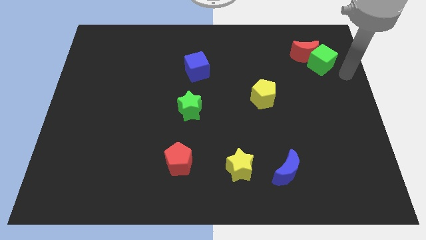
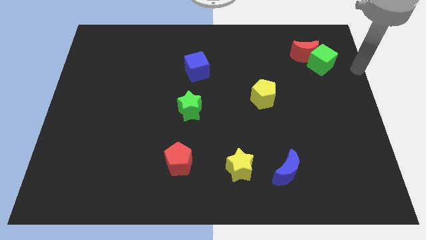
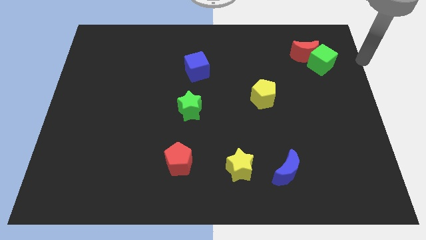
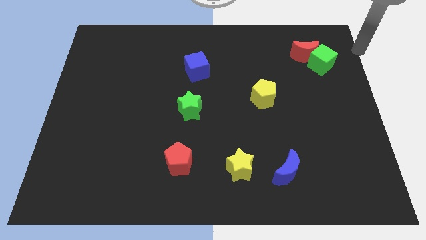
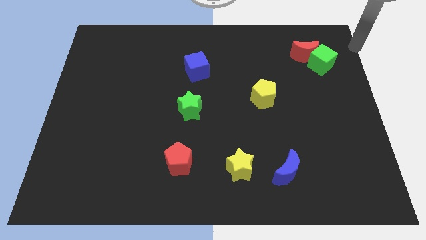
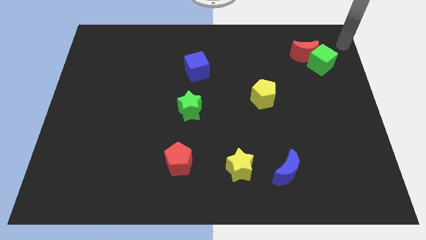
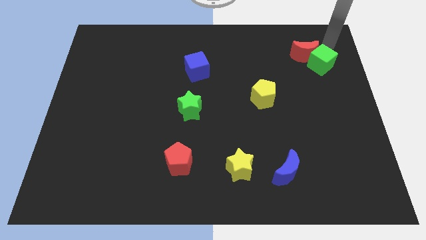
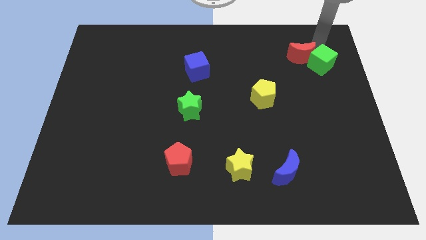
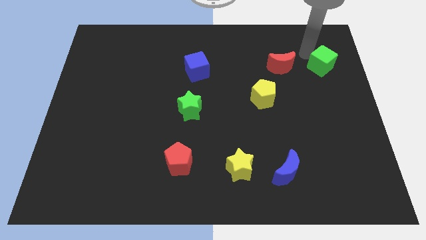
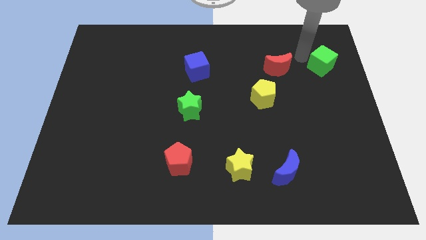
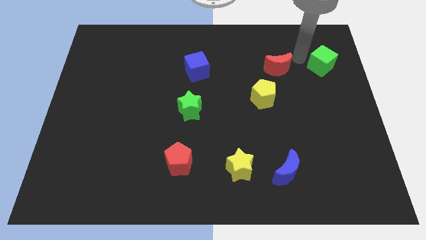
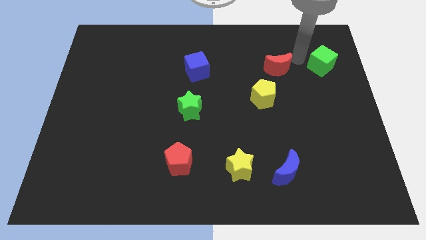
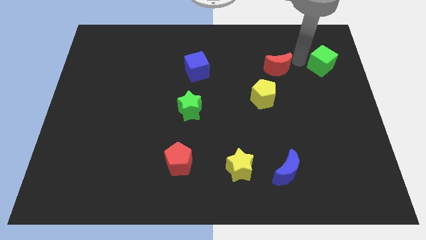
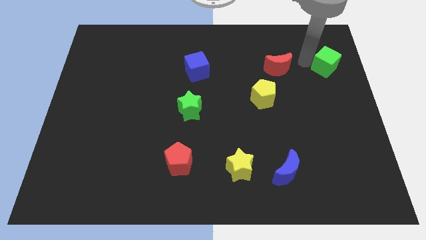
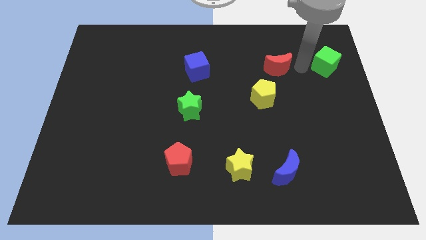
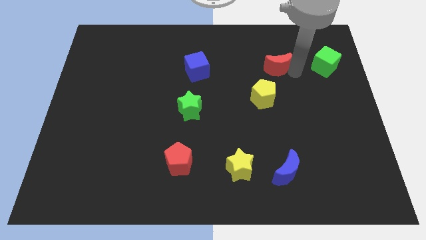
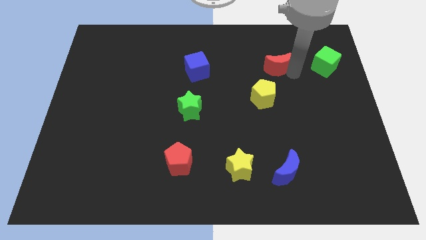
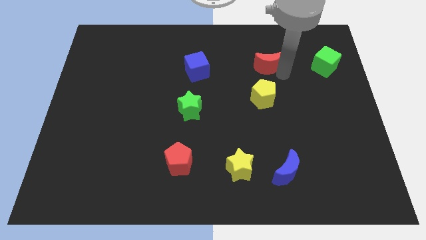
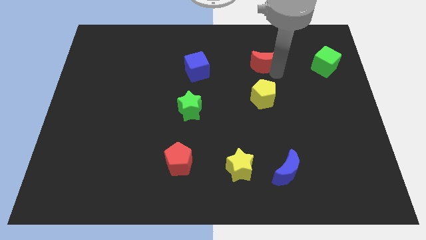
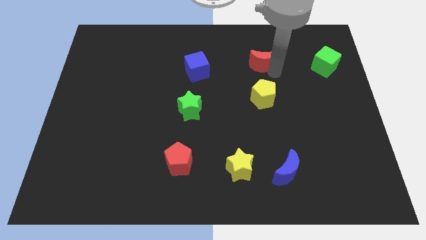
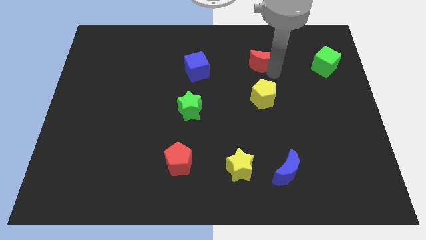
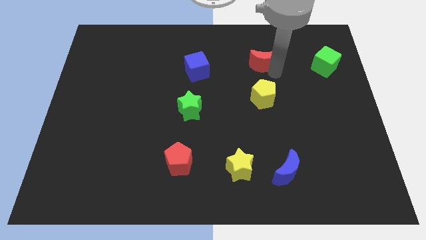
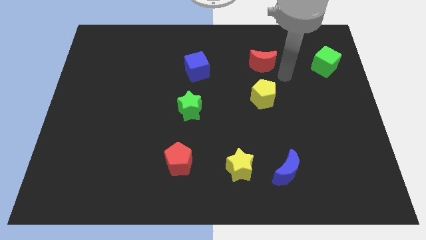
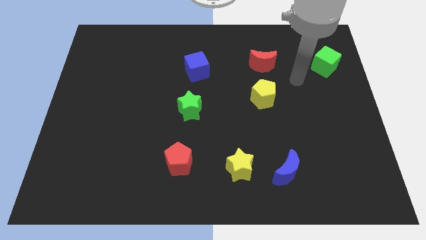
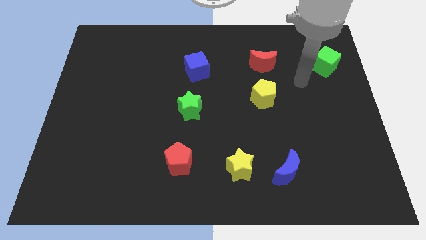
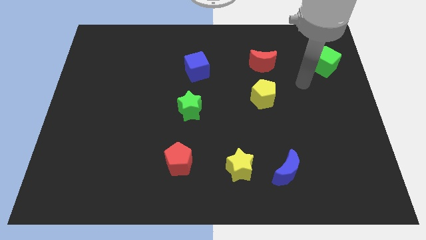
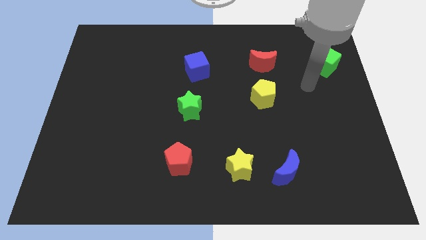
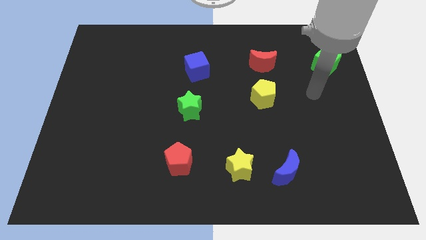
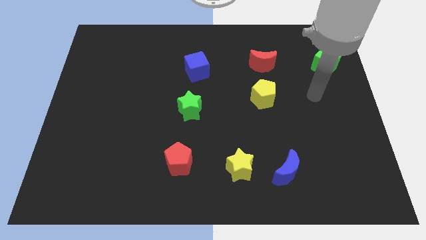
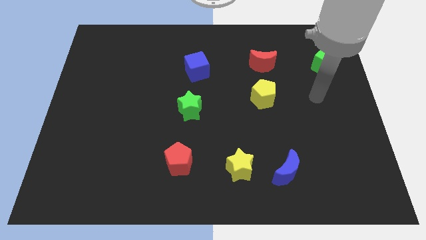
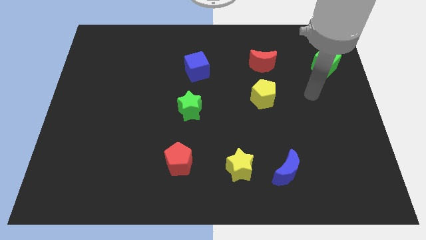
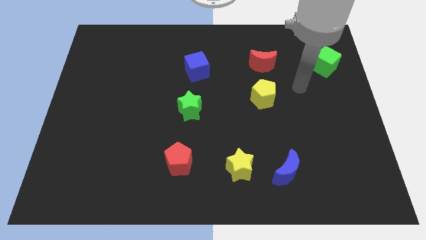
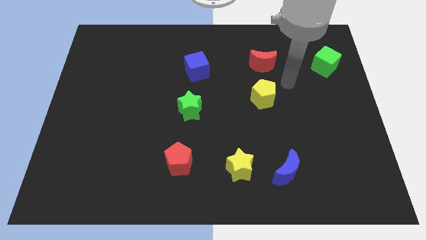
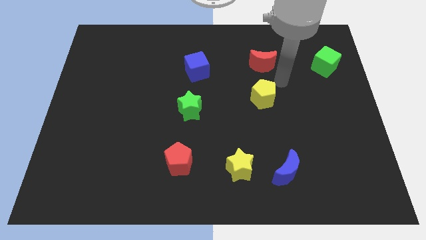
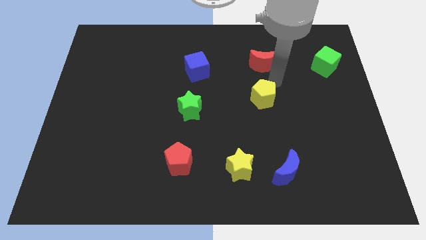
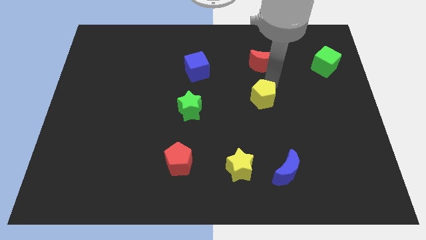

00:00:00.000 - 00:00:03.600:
place the red moon above the yellow pentagon

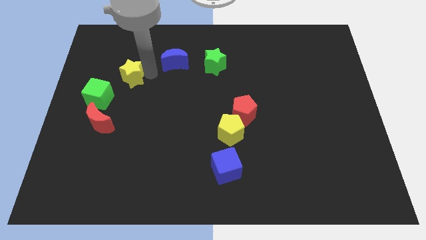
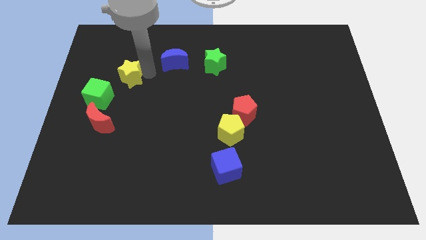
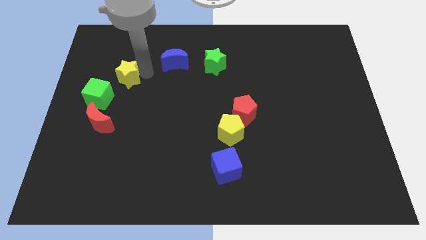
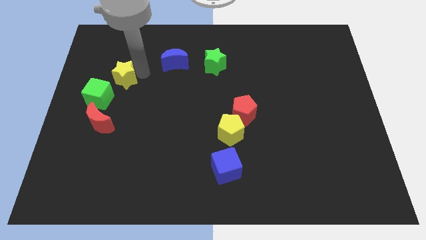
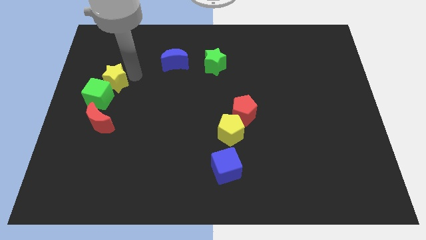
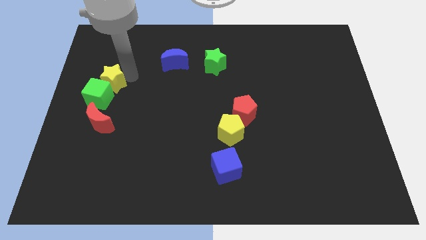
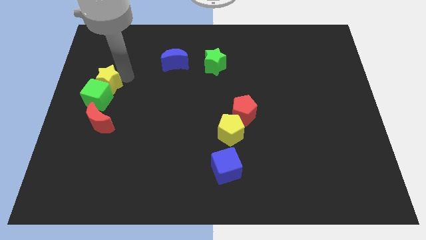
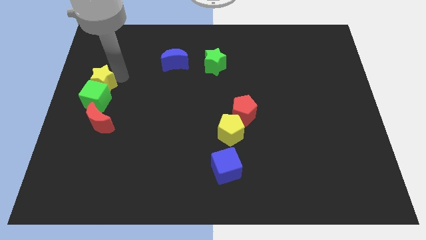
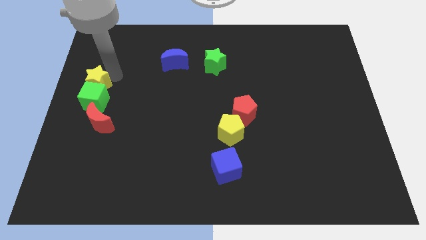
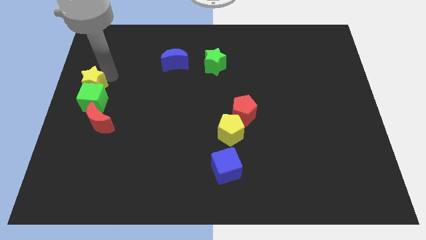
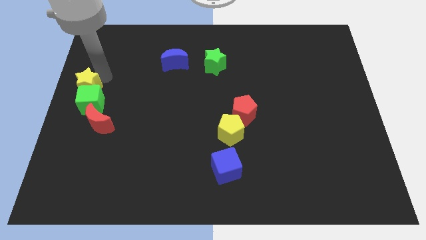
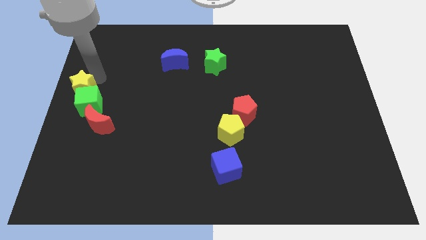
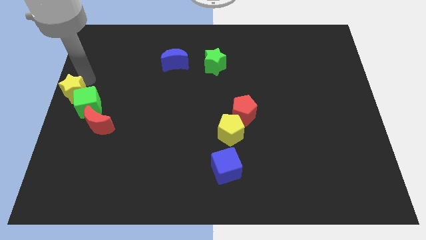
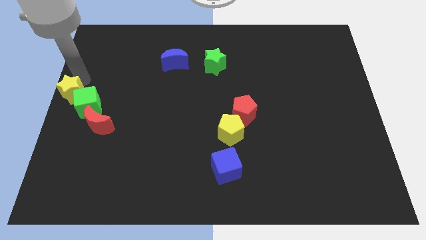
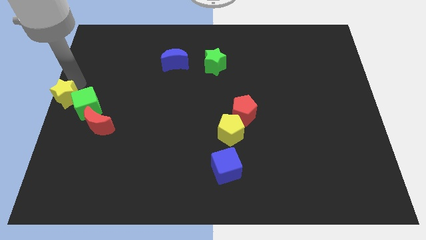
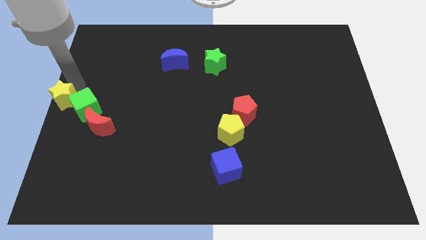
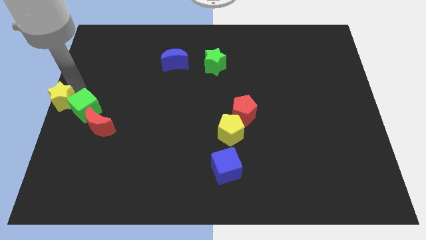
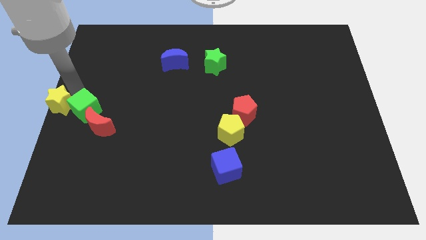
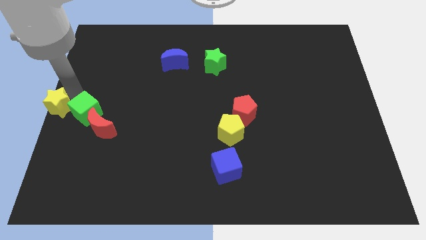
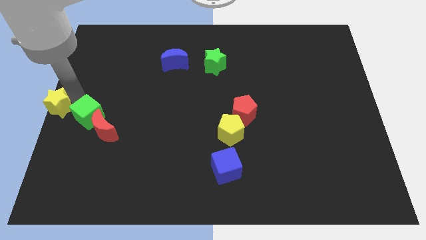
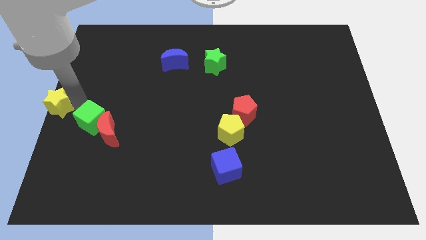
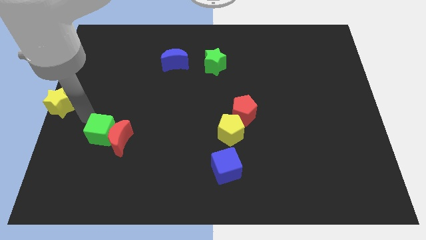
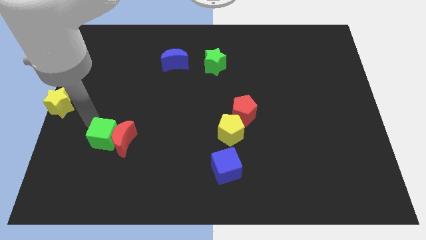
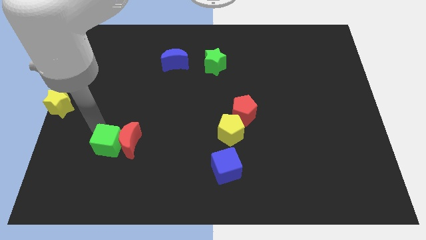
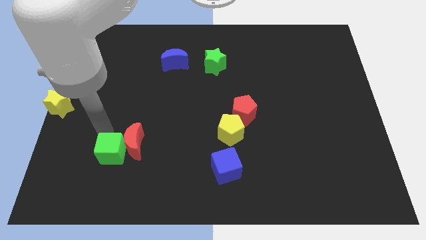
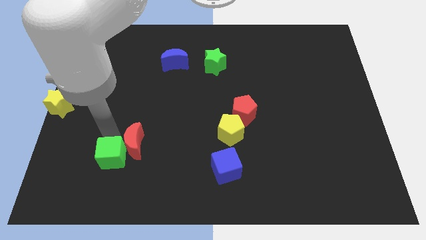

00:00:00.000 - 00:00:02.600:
separate the green cube and red moon from yellow star

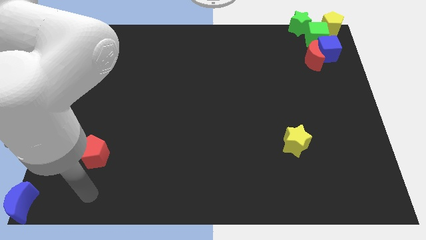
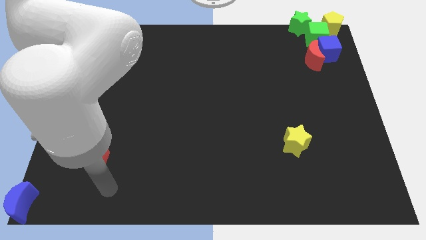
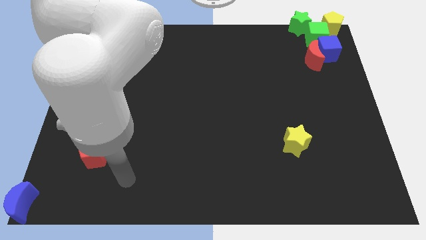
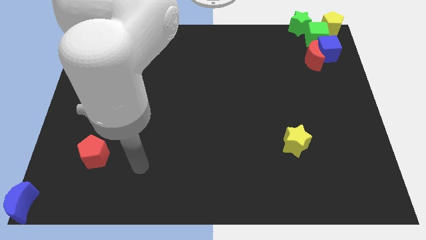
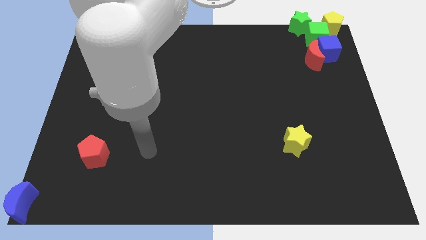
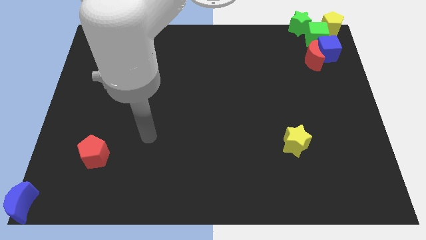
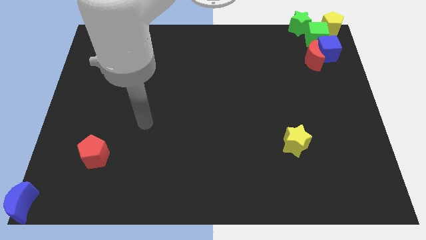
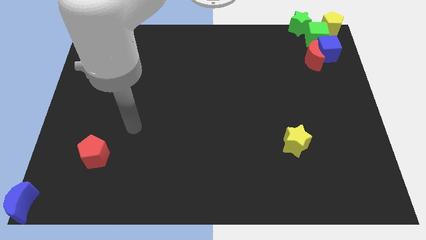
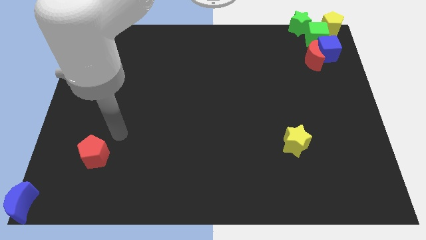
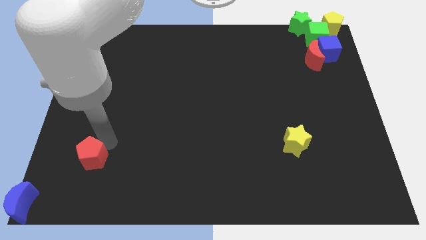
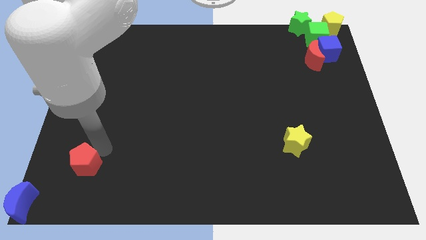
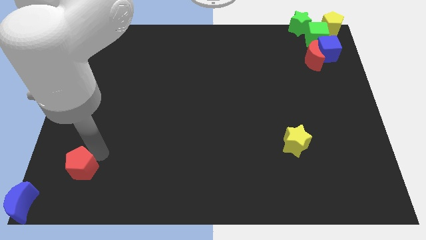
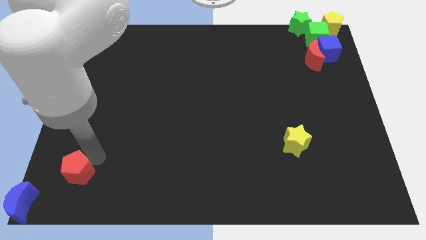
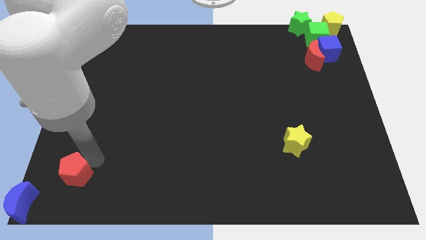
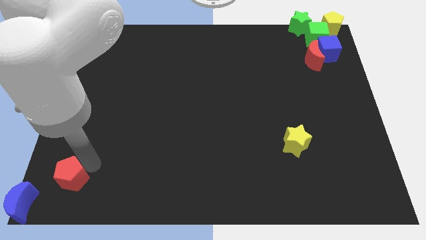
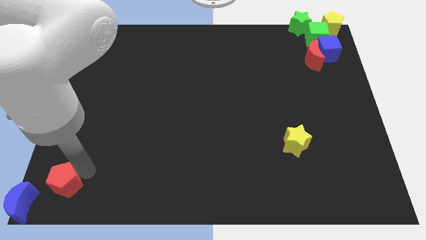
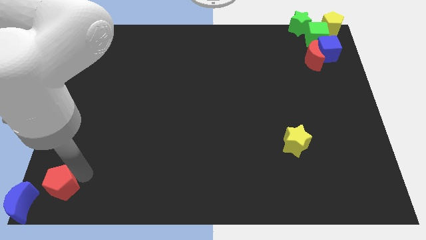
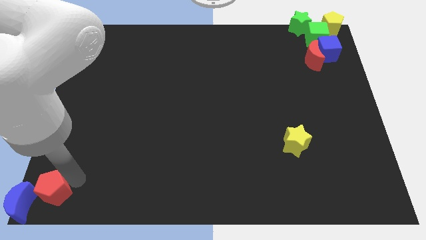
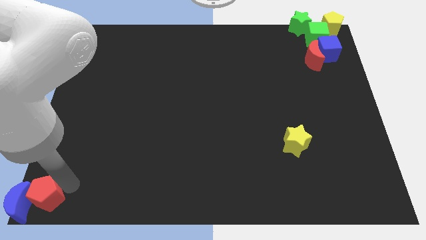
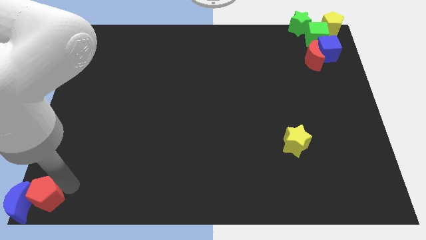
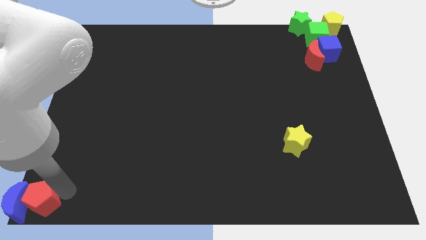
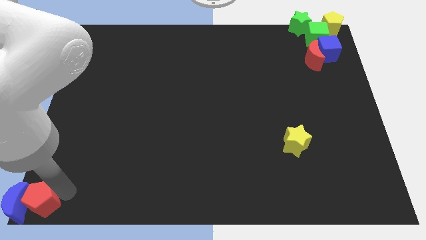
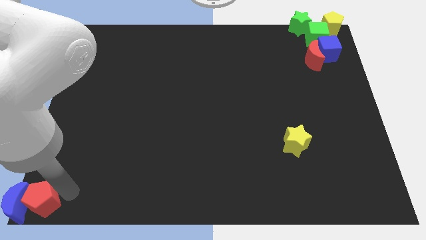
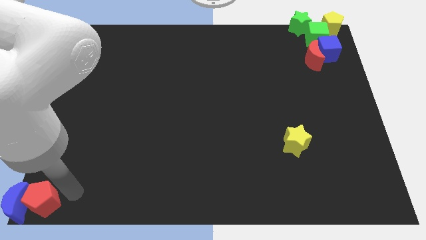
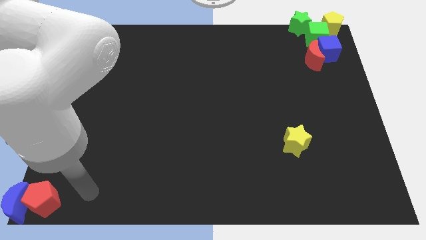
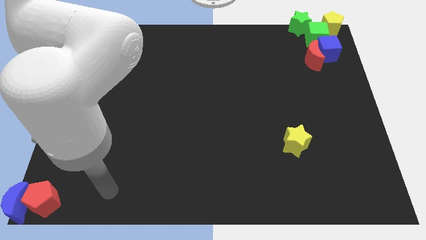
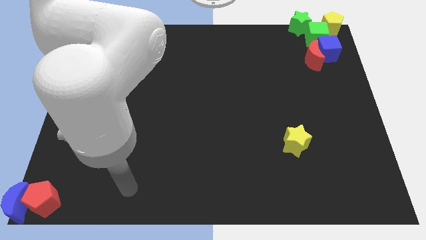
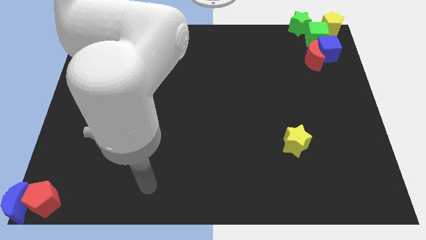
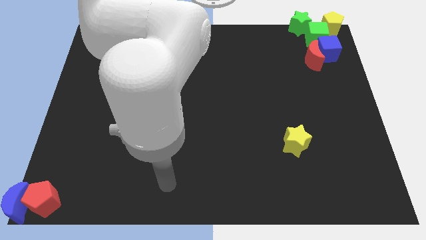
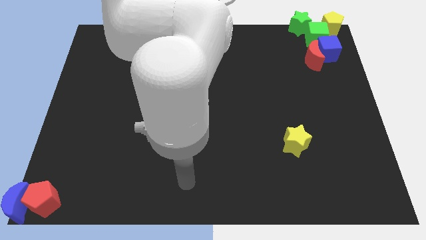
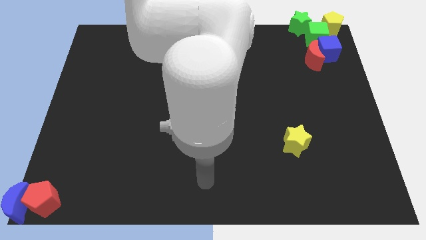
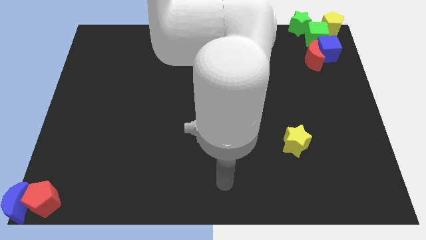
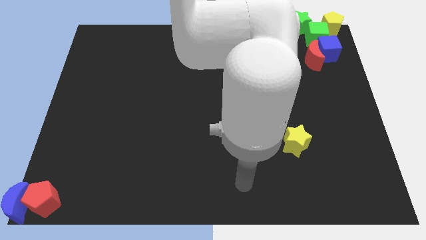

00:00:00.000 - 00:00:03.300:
push the red pentagon into the blue moon
